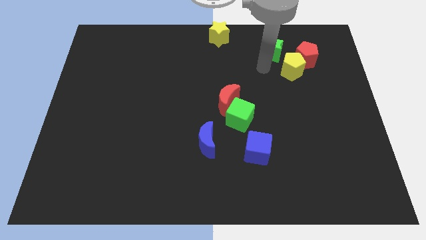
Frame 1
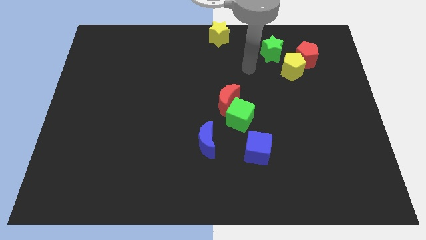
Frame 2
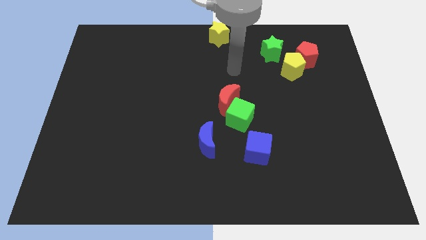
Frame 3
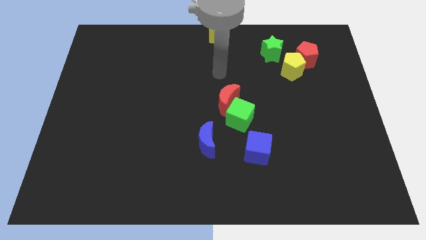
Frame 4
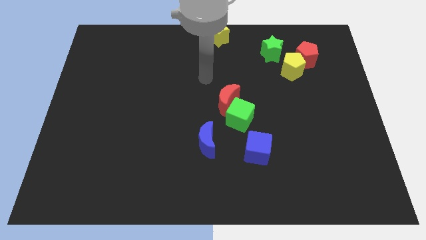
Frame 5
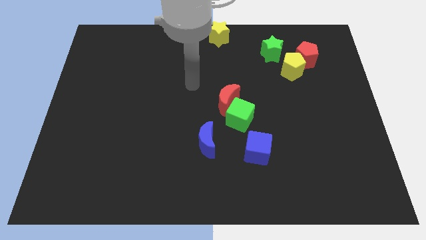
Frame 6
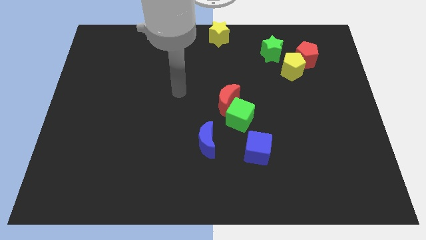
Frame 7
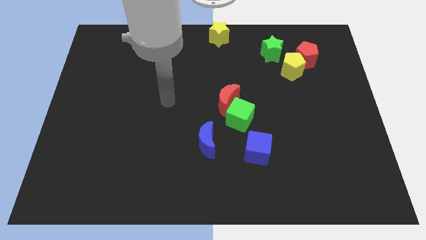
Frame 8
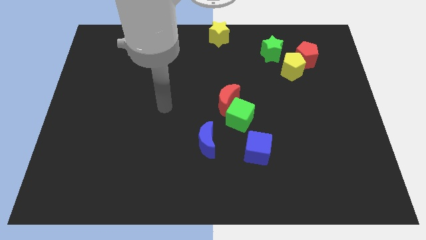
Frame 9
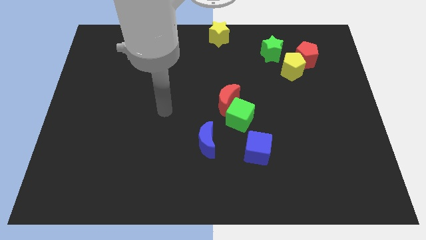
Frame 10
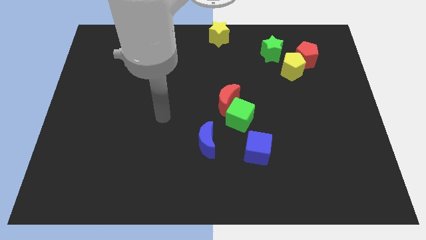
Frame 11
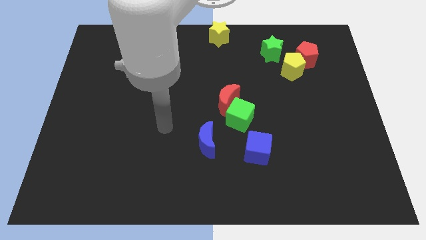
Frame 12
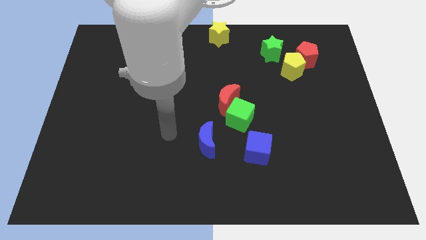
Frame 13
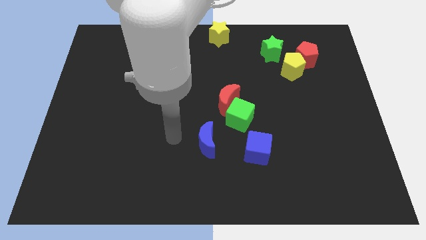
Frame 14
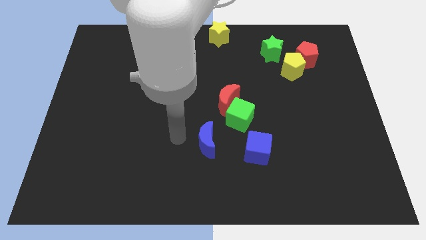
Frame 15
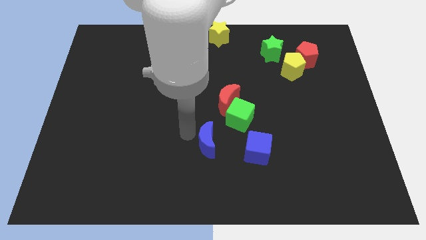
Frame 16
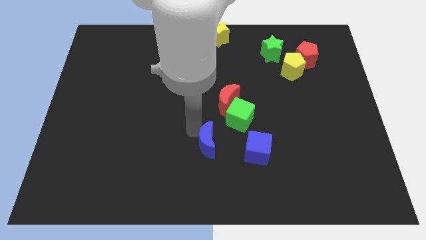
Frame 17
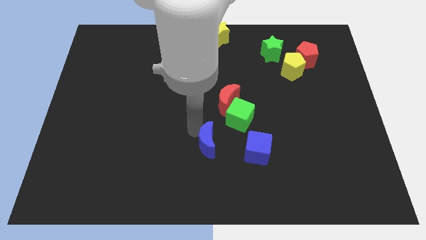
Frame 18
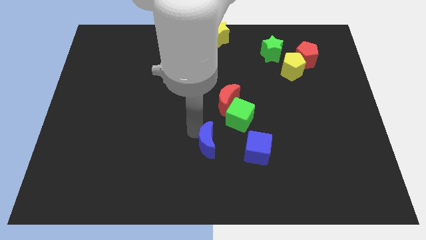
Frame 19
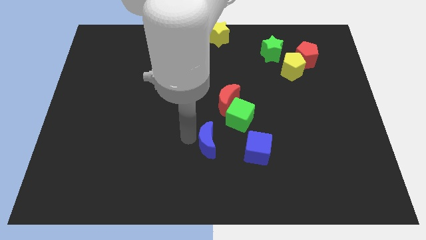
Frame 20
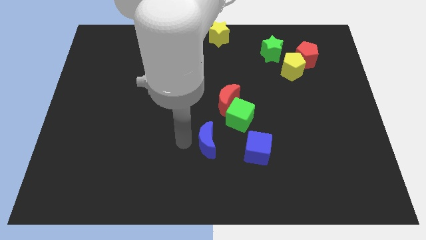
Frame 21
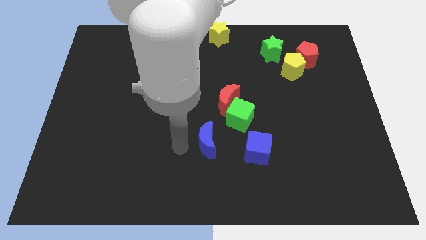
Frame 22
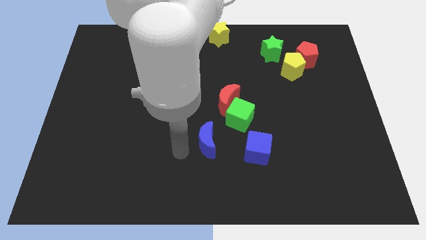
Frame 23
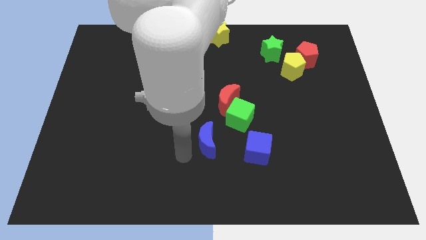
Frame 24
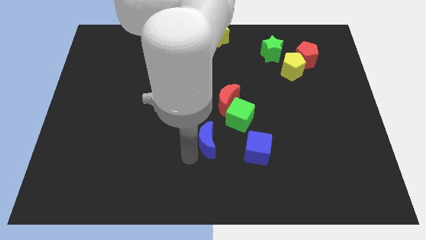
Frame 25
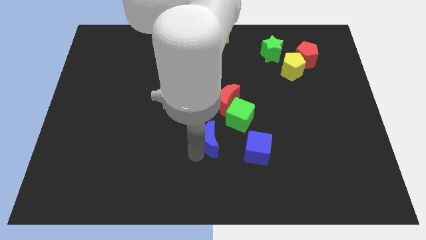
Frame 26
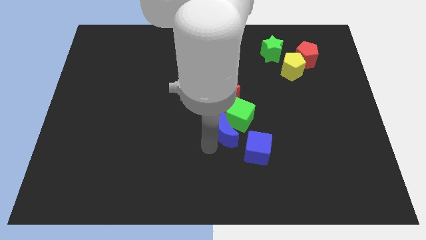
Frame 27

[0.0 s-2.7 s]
place blue moon to the bottom of green cube

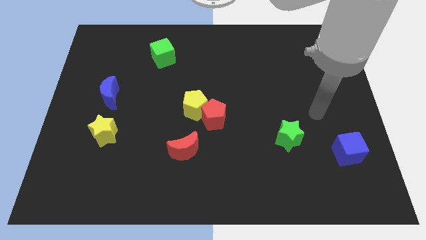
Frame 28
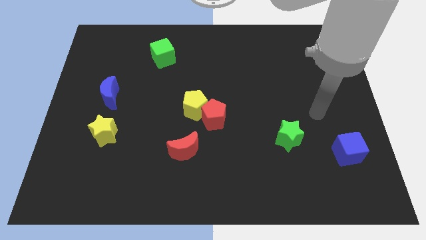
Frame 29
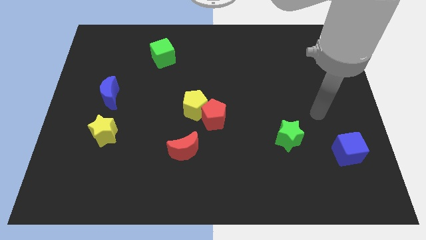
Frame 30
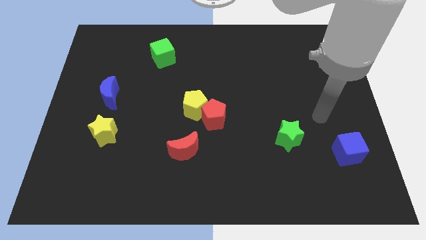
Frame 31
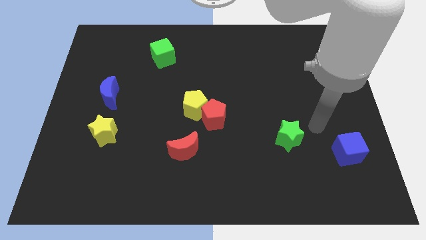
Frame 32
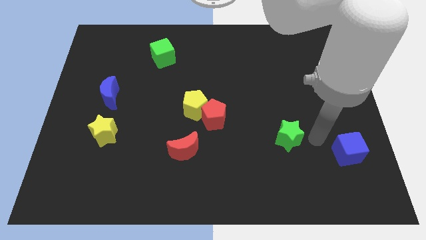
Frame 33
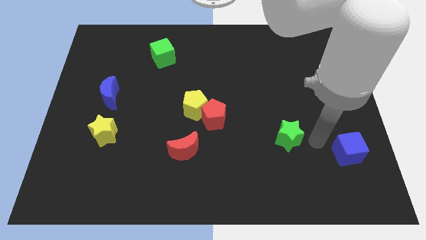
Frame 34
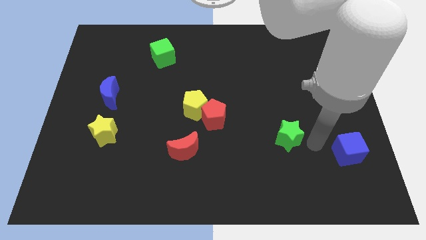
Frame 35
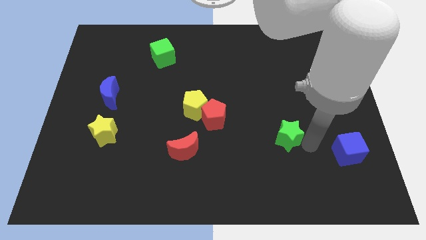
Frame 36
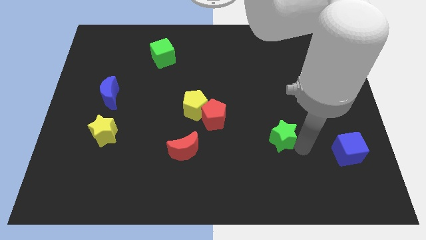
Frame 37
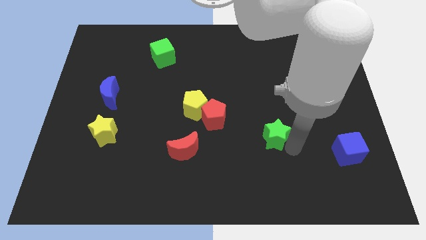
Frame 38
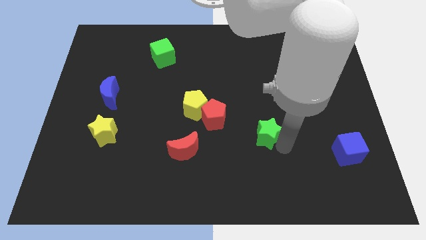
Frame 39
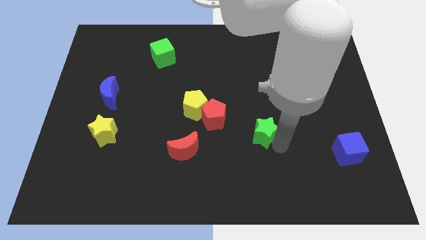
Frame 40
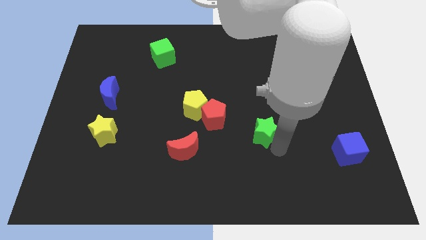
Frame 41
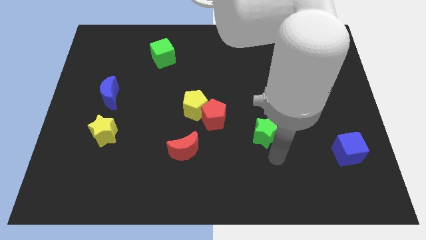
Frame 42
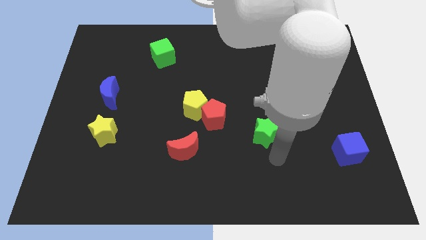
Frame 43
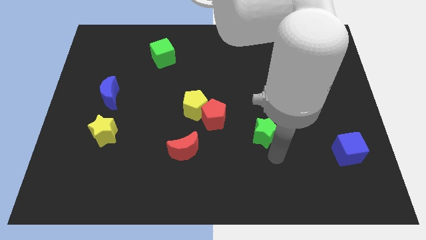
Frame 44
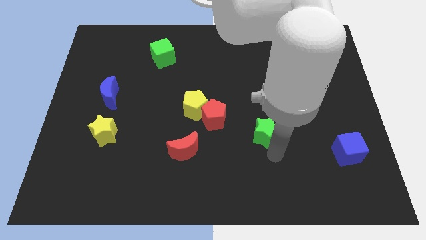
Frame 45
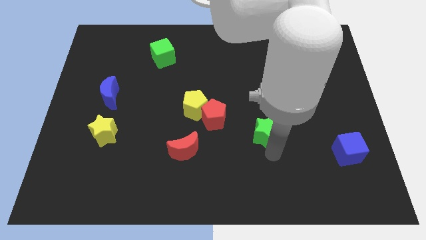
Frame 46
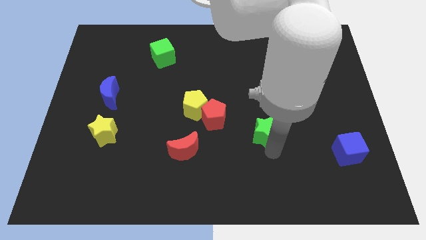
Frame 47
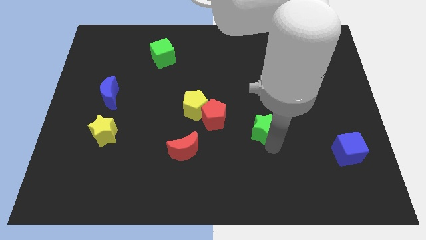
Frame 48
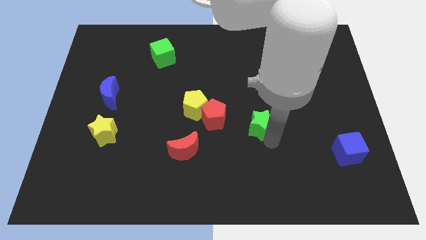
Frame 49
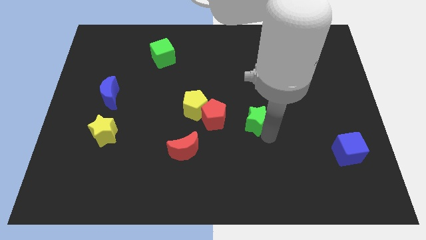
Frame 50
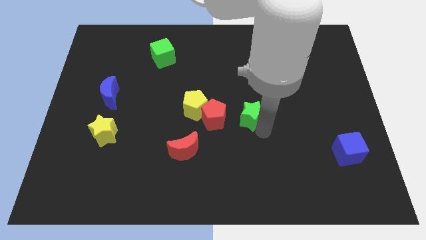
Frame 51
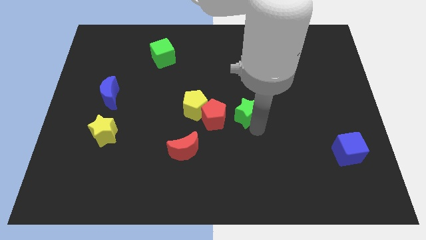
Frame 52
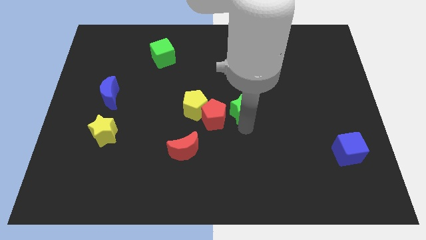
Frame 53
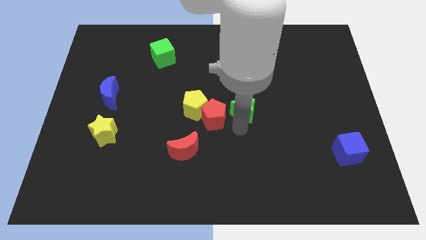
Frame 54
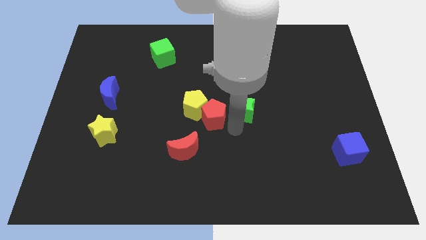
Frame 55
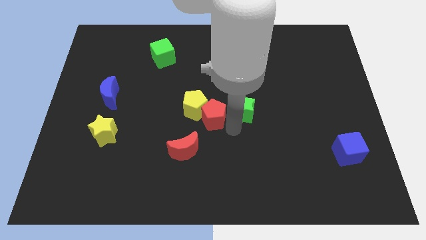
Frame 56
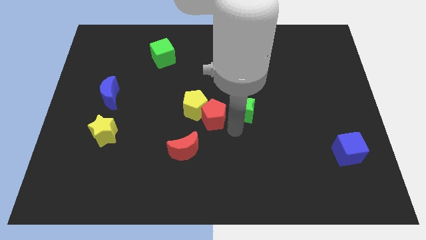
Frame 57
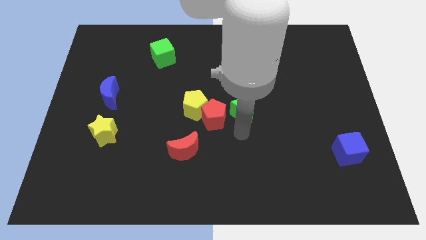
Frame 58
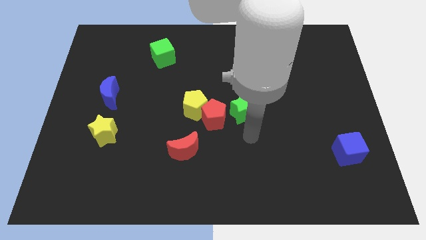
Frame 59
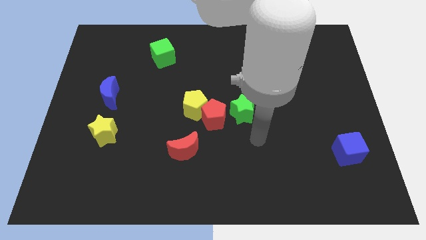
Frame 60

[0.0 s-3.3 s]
move the green star to the right of the red pentagon

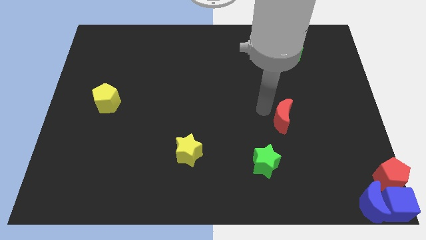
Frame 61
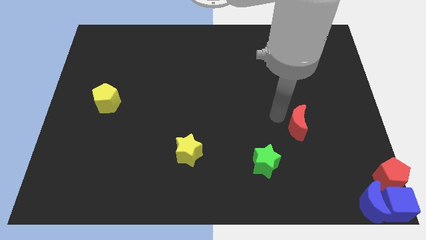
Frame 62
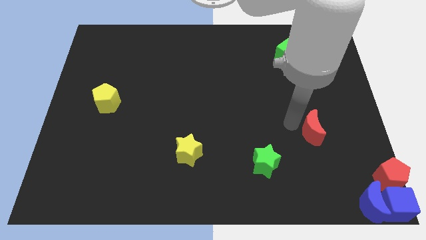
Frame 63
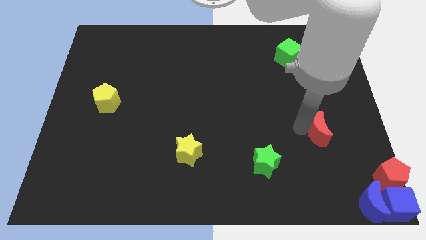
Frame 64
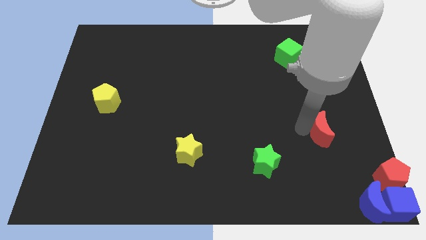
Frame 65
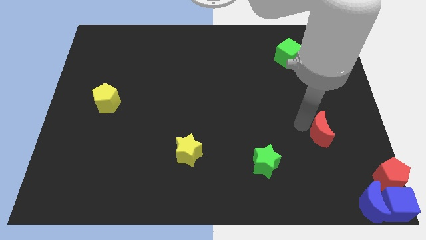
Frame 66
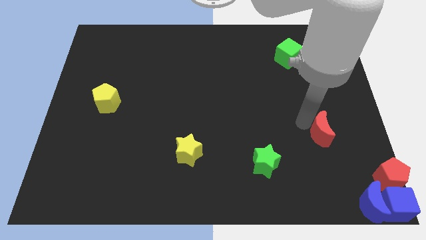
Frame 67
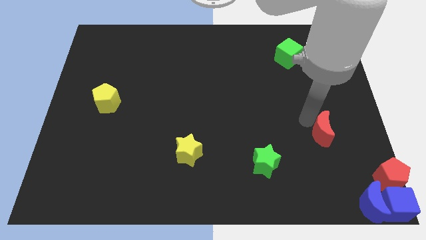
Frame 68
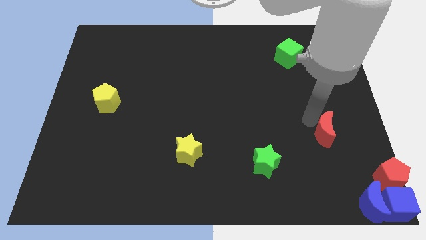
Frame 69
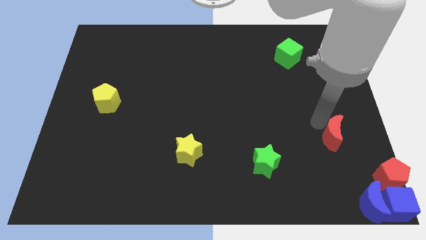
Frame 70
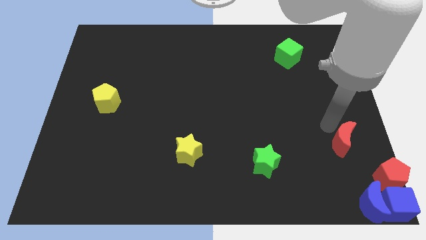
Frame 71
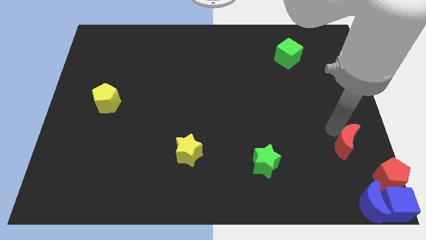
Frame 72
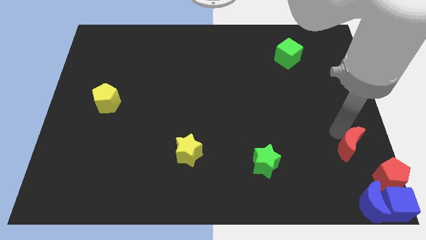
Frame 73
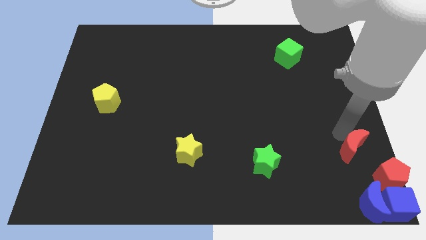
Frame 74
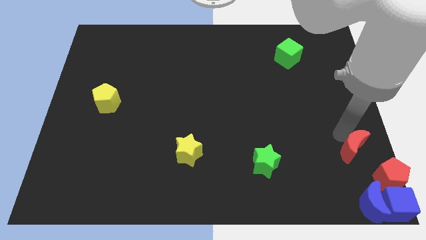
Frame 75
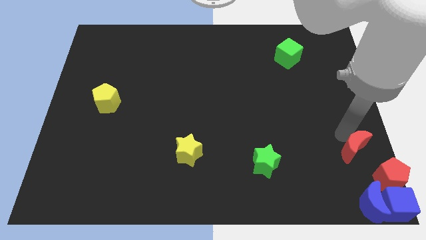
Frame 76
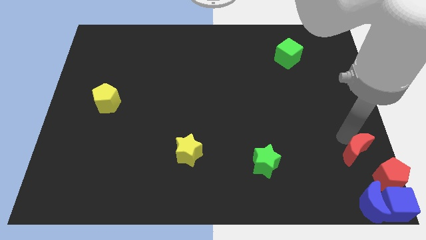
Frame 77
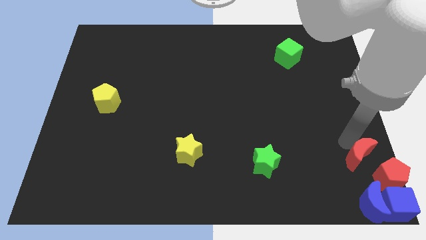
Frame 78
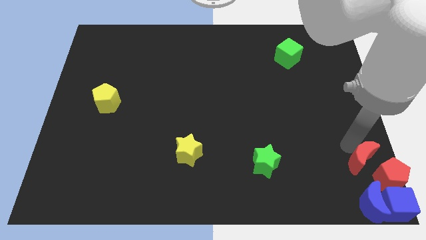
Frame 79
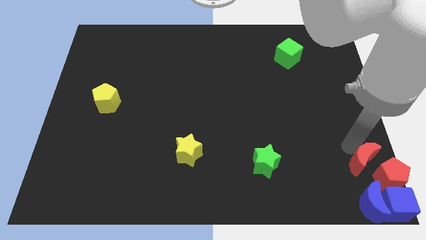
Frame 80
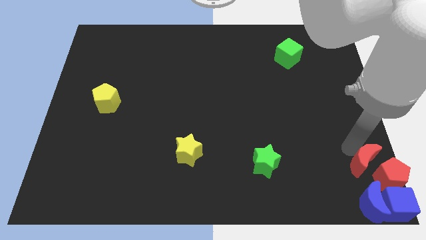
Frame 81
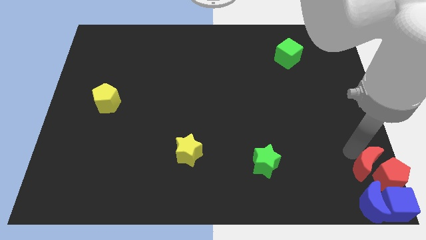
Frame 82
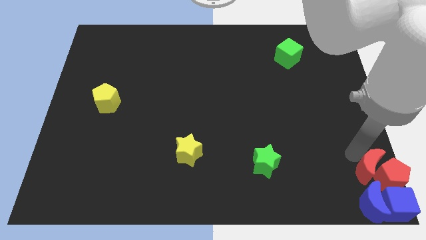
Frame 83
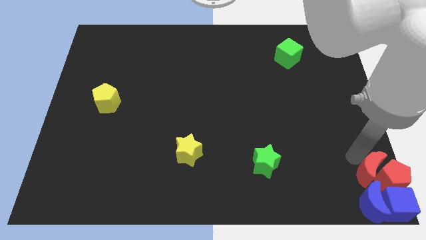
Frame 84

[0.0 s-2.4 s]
push the red crescent into red pentagon

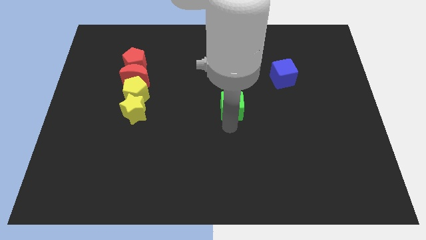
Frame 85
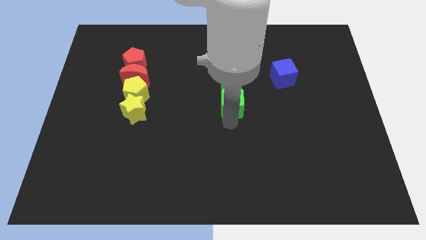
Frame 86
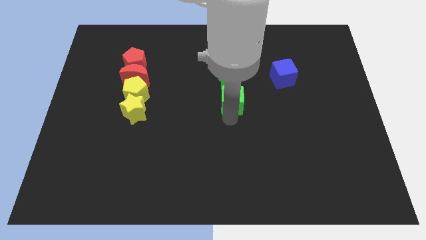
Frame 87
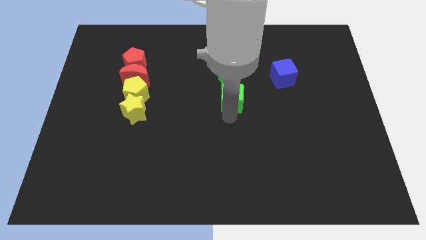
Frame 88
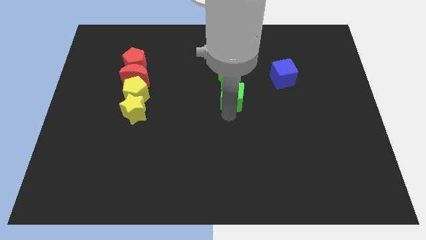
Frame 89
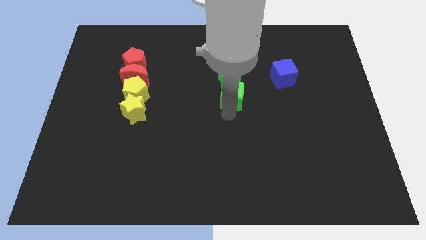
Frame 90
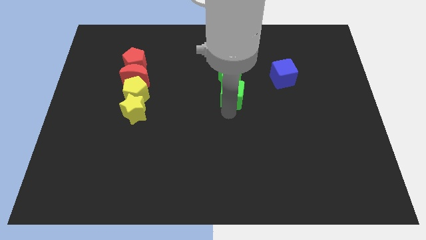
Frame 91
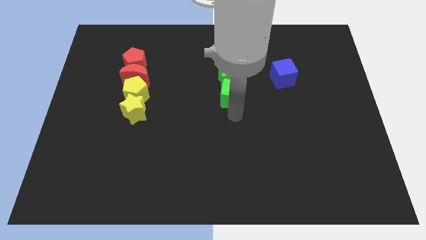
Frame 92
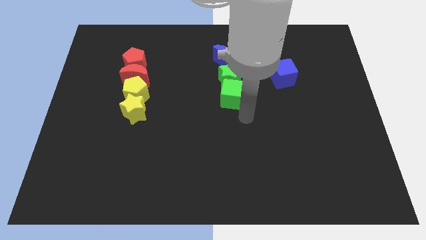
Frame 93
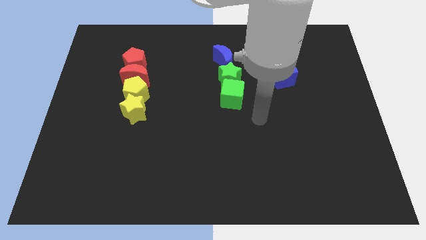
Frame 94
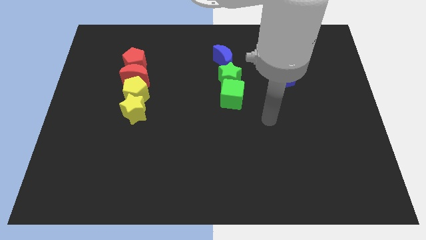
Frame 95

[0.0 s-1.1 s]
move the green cube into the green star
